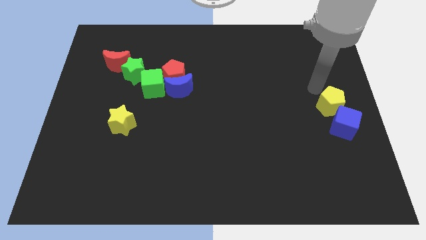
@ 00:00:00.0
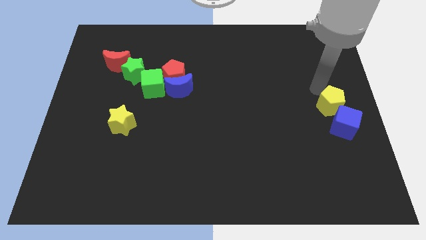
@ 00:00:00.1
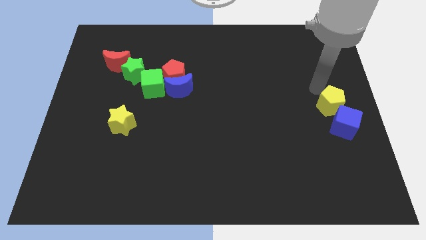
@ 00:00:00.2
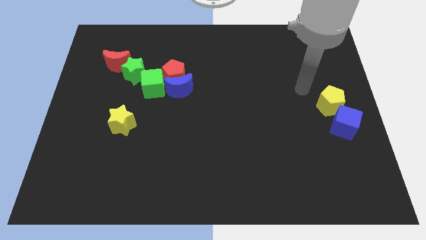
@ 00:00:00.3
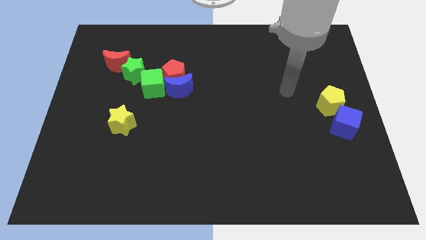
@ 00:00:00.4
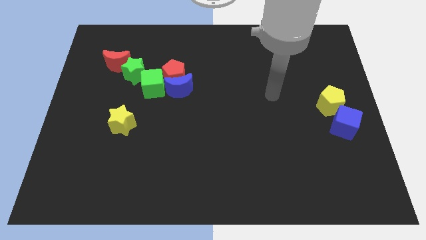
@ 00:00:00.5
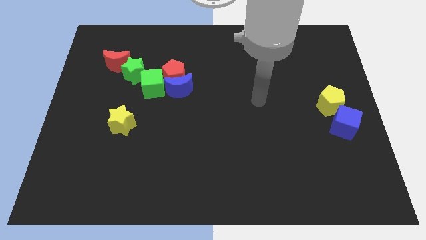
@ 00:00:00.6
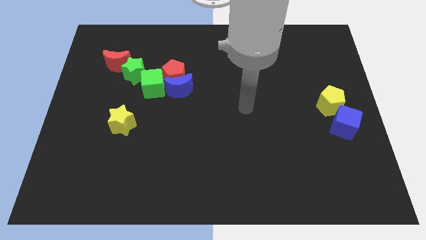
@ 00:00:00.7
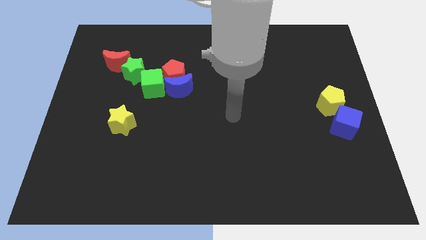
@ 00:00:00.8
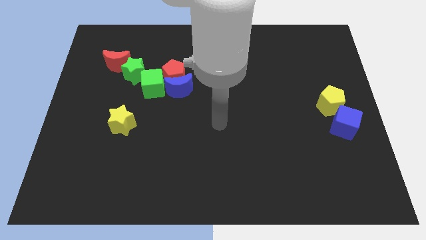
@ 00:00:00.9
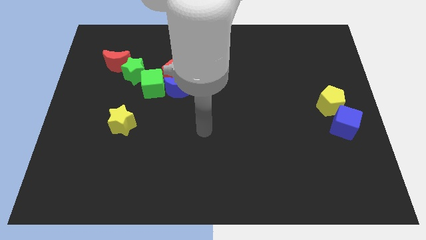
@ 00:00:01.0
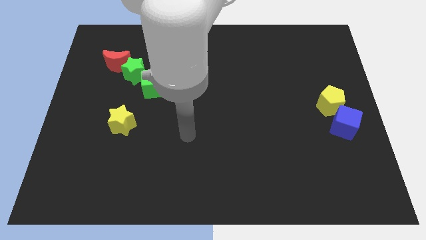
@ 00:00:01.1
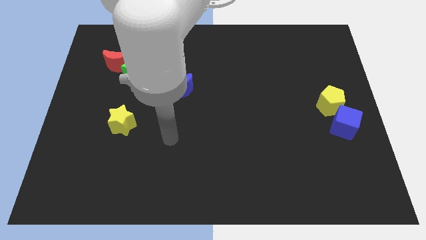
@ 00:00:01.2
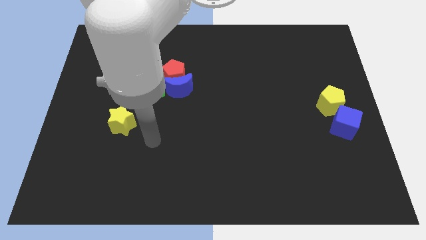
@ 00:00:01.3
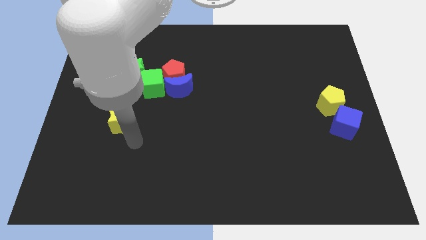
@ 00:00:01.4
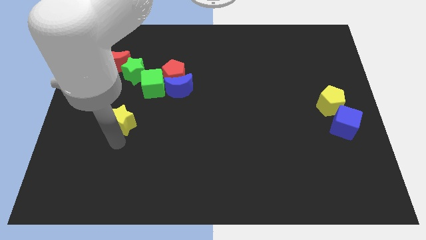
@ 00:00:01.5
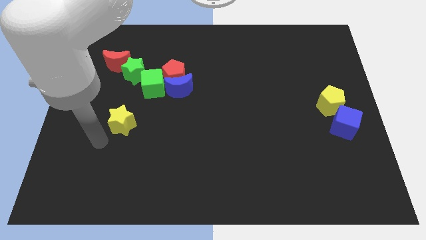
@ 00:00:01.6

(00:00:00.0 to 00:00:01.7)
move your arm to the bottom left of the yellow star

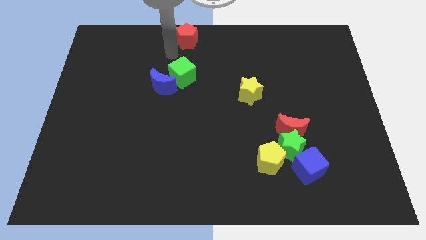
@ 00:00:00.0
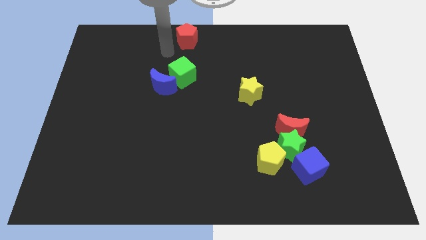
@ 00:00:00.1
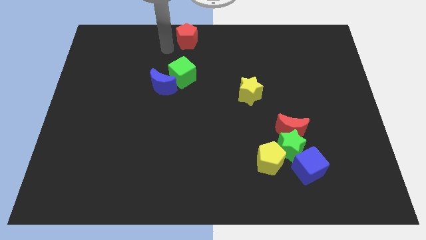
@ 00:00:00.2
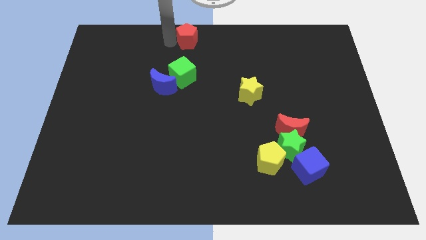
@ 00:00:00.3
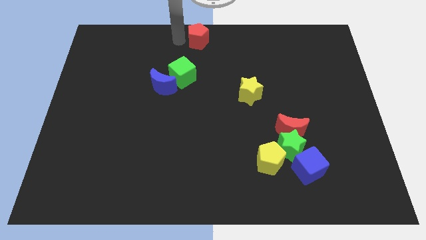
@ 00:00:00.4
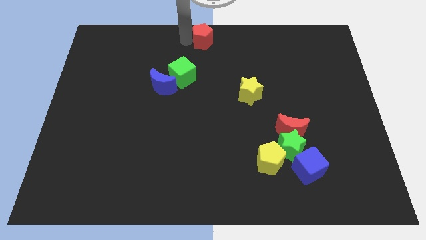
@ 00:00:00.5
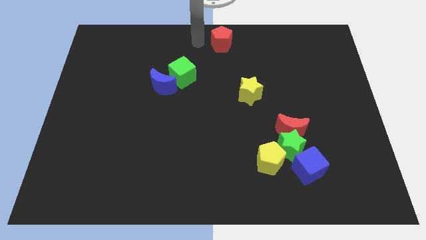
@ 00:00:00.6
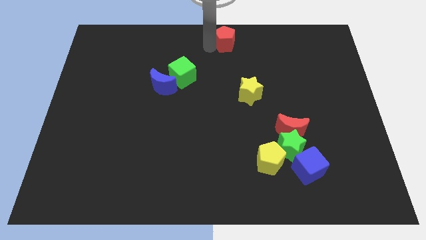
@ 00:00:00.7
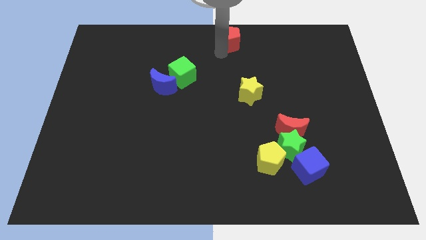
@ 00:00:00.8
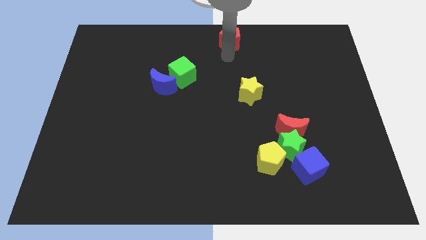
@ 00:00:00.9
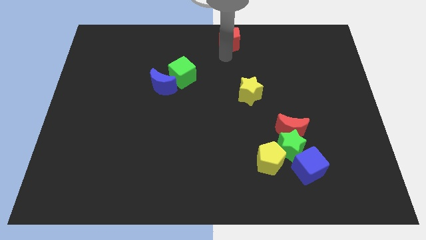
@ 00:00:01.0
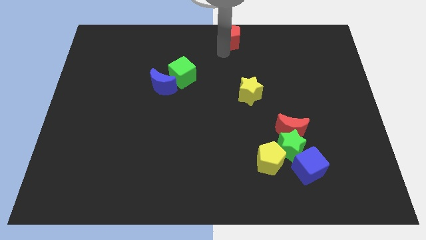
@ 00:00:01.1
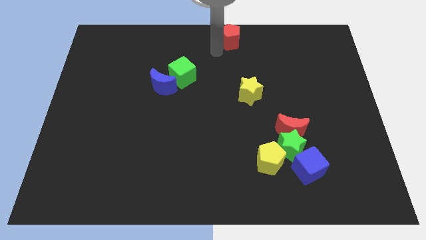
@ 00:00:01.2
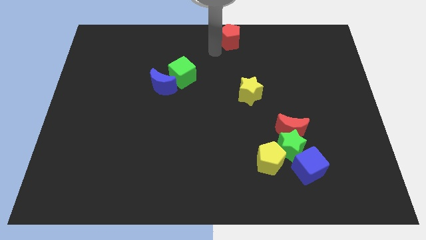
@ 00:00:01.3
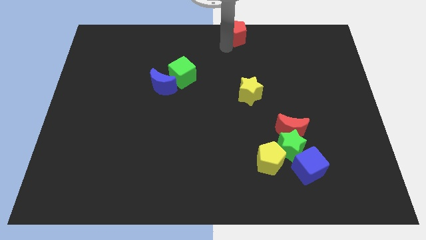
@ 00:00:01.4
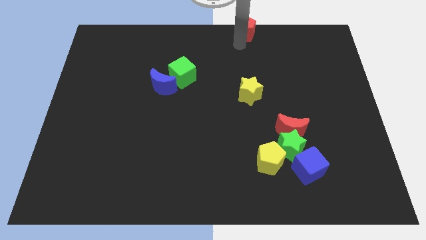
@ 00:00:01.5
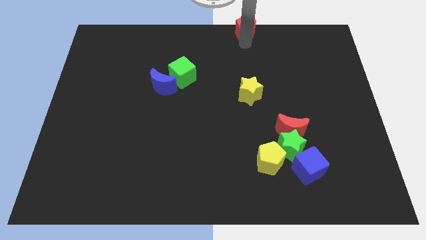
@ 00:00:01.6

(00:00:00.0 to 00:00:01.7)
place the red pentagon at the top center of the board

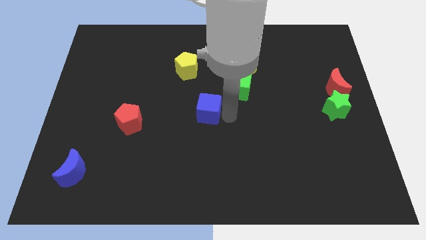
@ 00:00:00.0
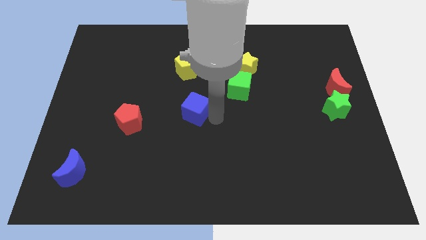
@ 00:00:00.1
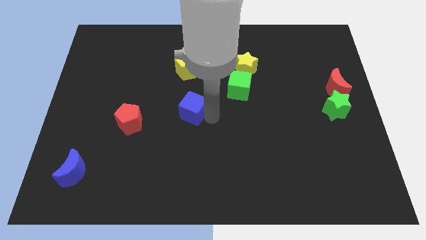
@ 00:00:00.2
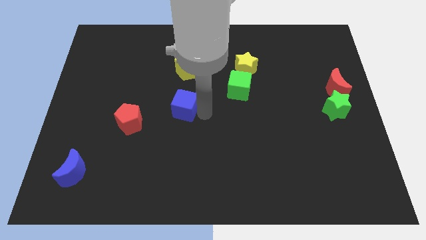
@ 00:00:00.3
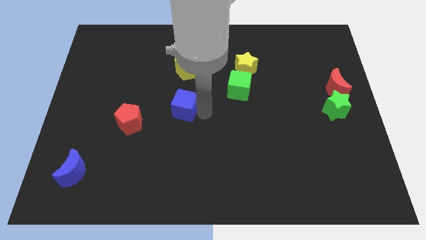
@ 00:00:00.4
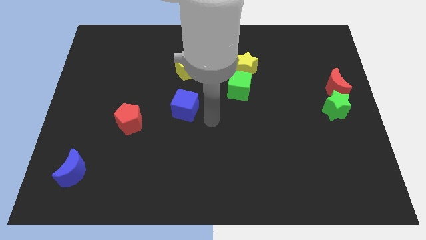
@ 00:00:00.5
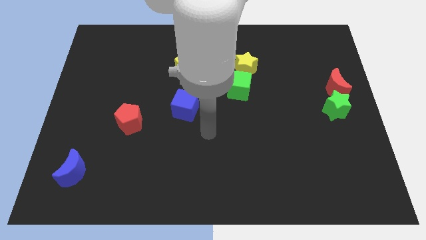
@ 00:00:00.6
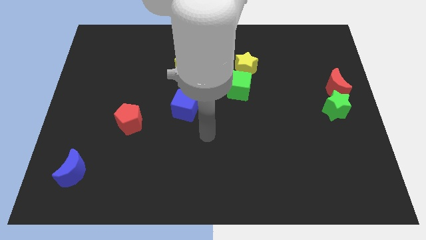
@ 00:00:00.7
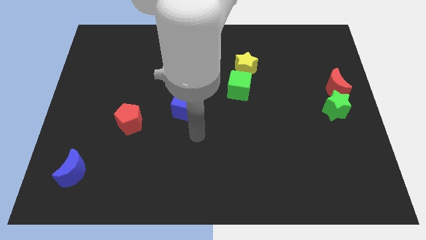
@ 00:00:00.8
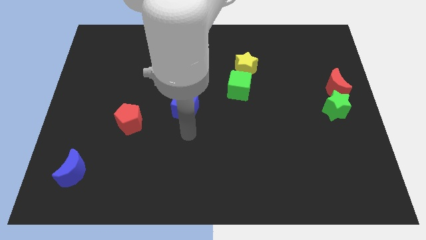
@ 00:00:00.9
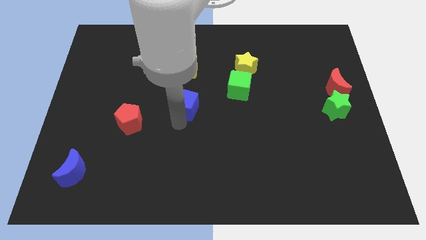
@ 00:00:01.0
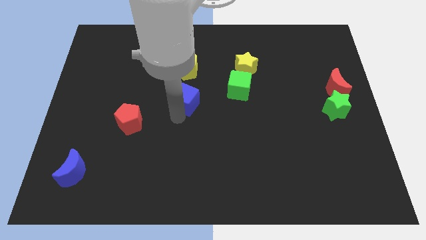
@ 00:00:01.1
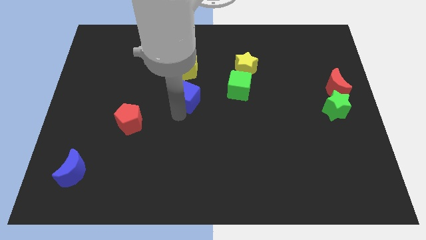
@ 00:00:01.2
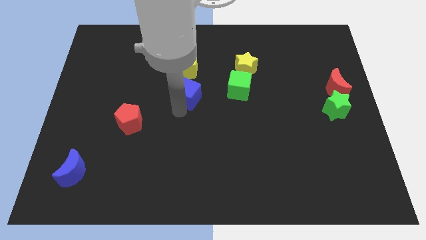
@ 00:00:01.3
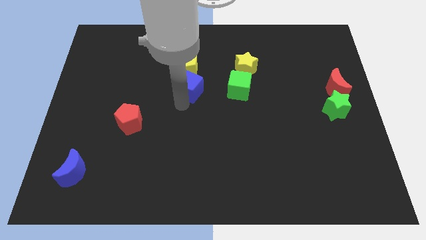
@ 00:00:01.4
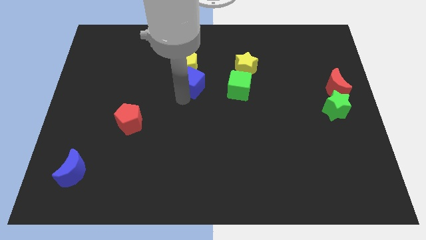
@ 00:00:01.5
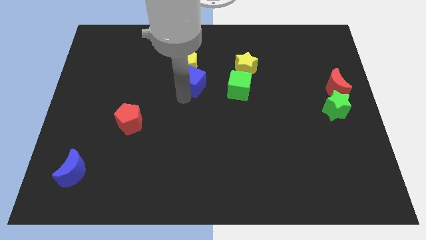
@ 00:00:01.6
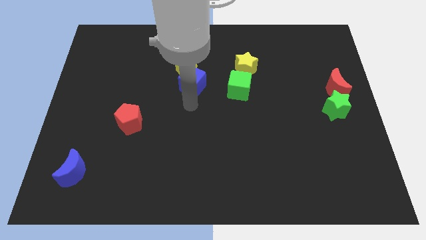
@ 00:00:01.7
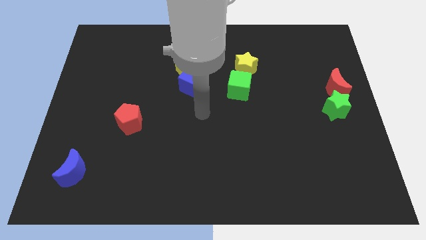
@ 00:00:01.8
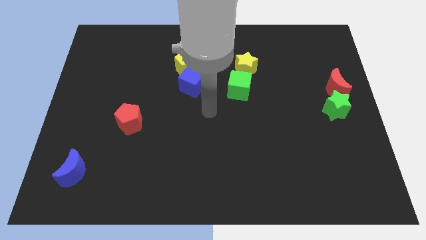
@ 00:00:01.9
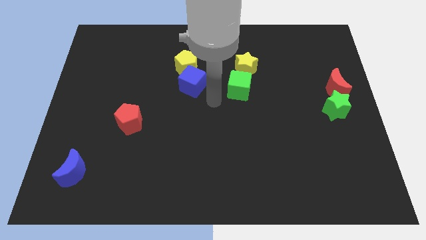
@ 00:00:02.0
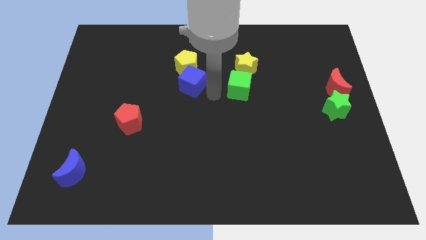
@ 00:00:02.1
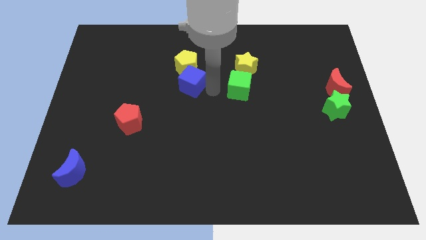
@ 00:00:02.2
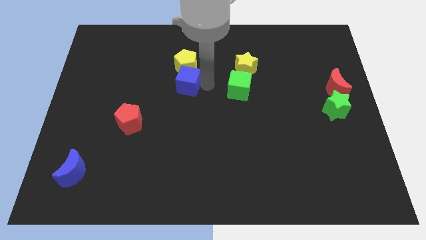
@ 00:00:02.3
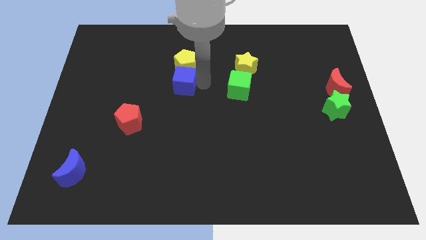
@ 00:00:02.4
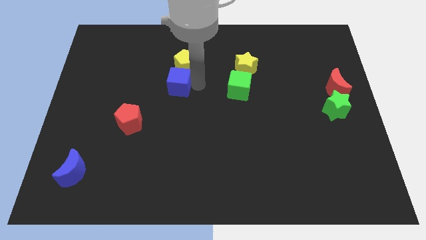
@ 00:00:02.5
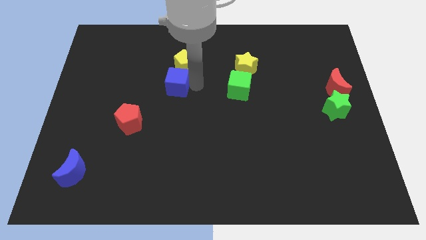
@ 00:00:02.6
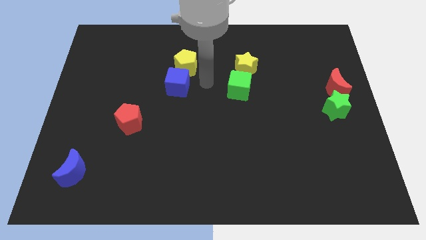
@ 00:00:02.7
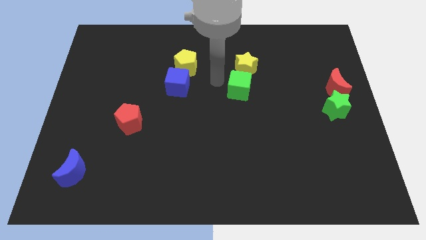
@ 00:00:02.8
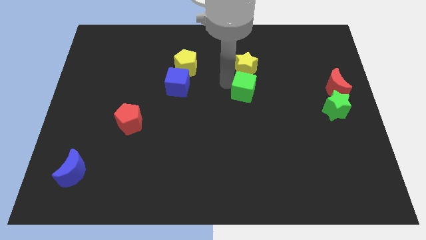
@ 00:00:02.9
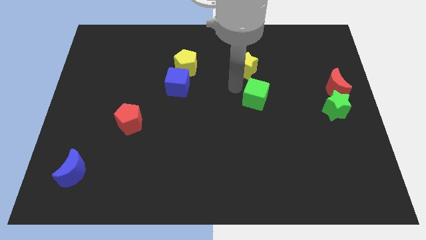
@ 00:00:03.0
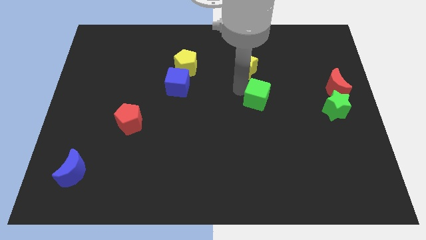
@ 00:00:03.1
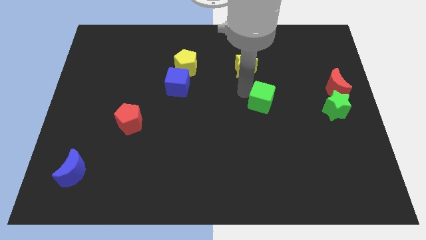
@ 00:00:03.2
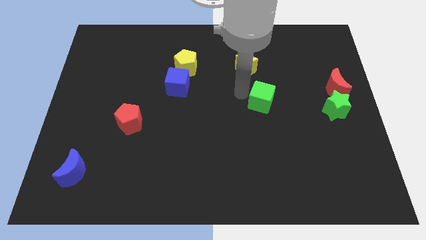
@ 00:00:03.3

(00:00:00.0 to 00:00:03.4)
slightly push the green cube towards the right

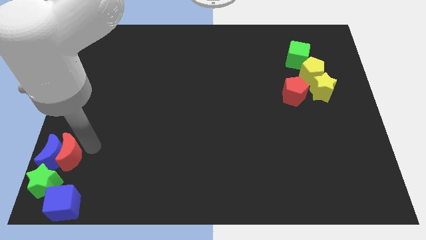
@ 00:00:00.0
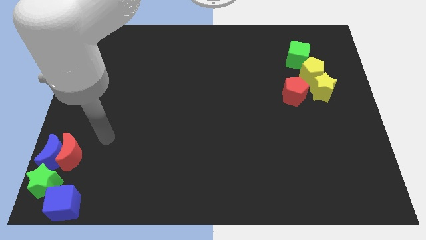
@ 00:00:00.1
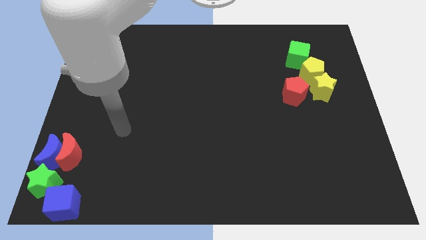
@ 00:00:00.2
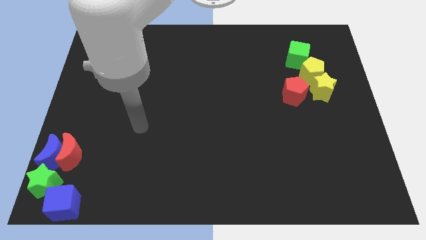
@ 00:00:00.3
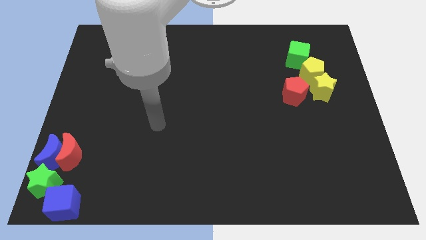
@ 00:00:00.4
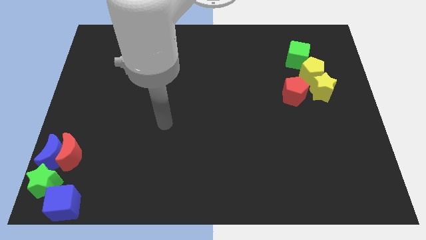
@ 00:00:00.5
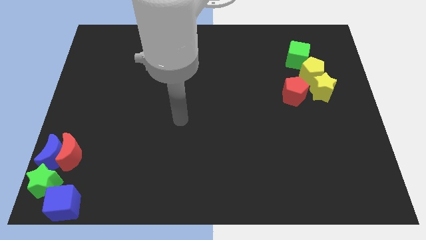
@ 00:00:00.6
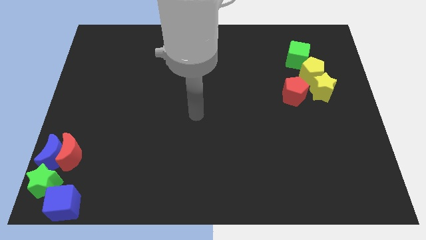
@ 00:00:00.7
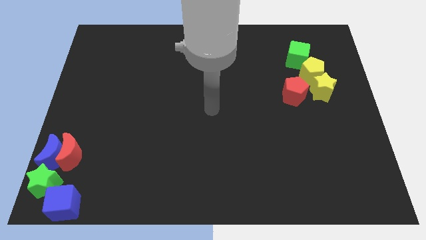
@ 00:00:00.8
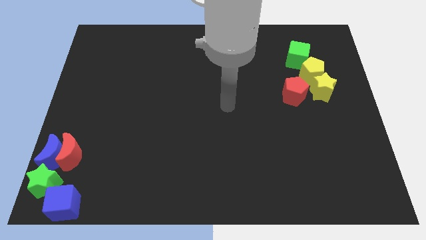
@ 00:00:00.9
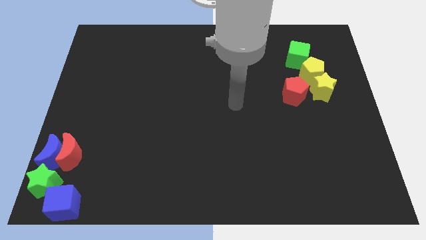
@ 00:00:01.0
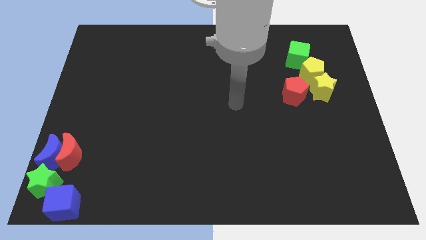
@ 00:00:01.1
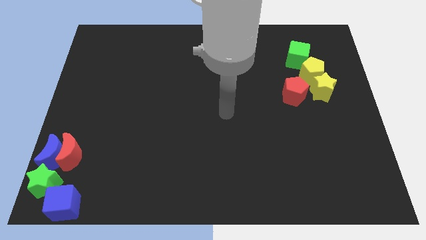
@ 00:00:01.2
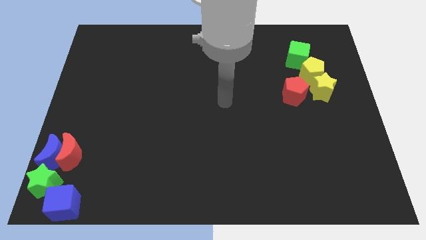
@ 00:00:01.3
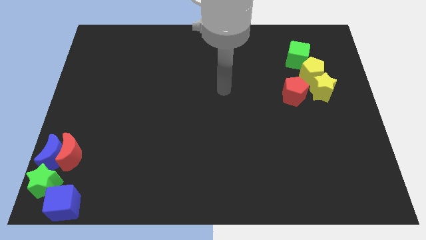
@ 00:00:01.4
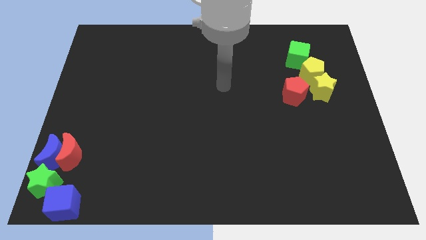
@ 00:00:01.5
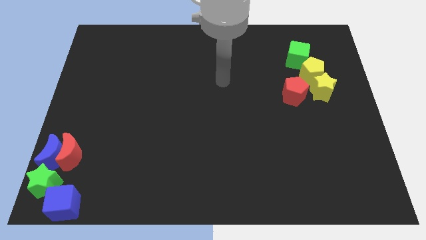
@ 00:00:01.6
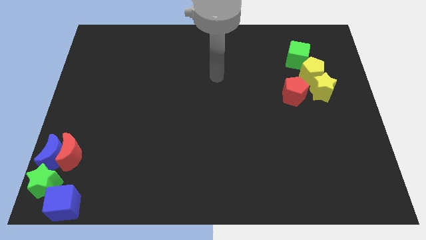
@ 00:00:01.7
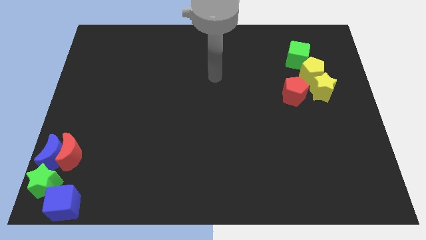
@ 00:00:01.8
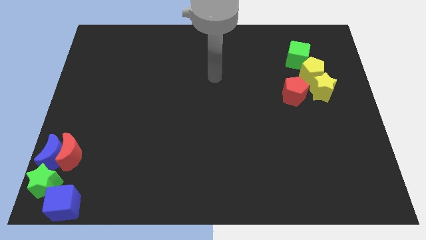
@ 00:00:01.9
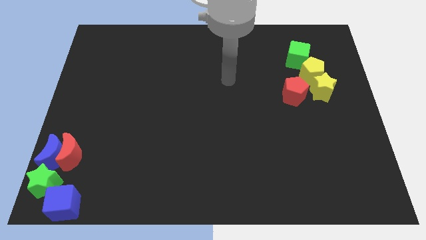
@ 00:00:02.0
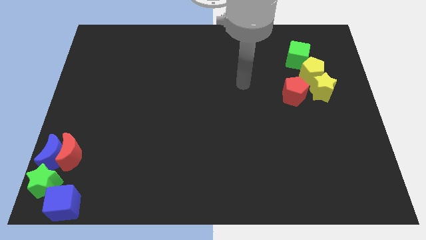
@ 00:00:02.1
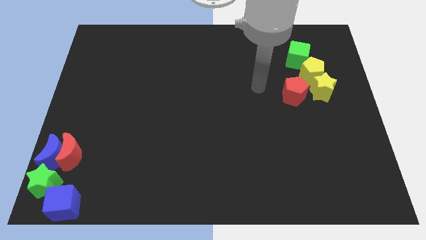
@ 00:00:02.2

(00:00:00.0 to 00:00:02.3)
place your arm at the left of the red pentagon
